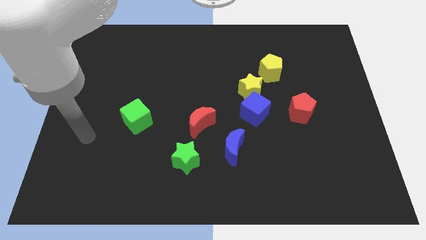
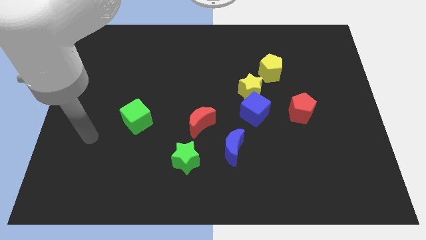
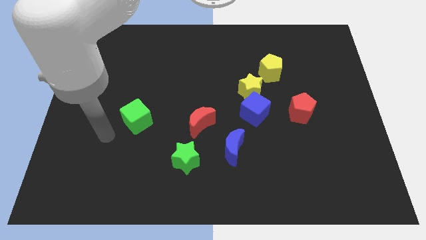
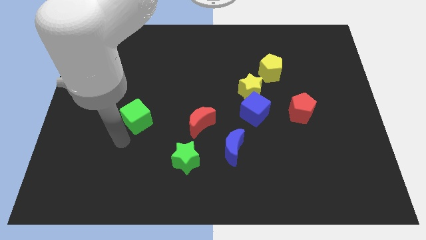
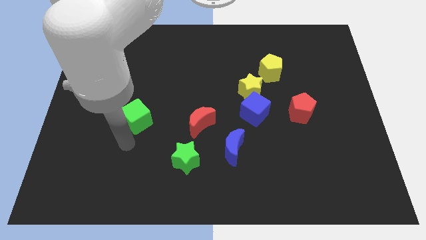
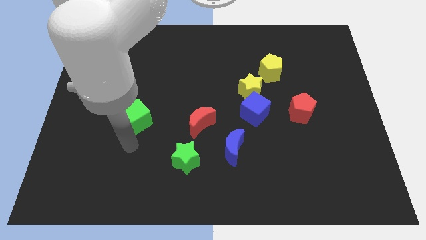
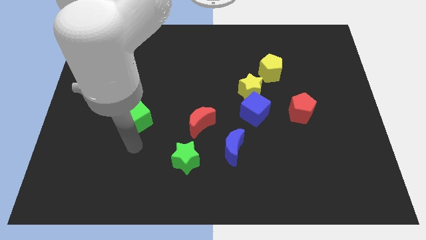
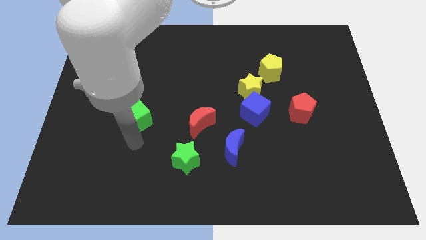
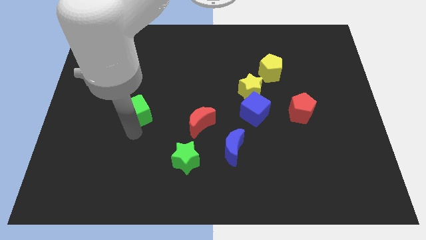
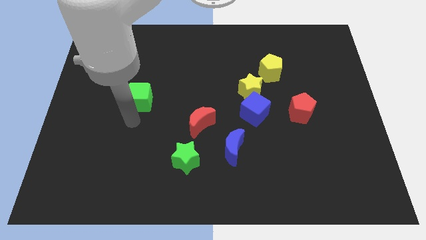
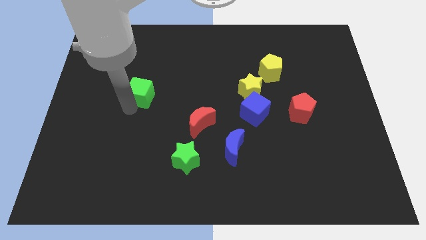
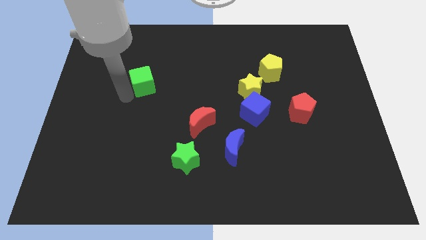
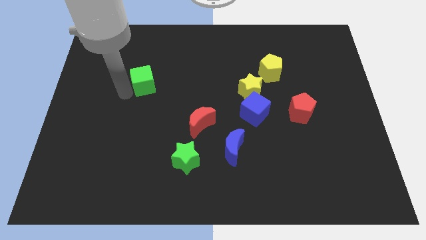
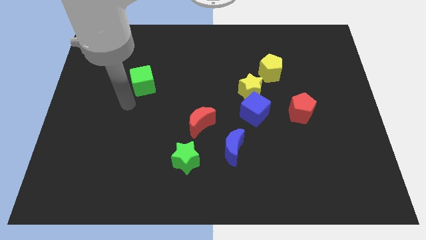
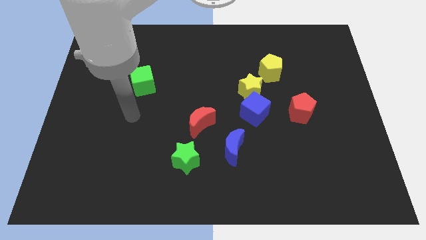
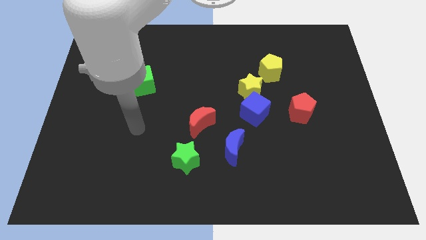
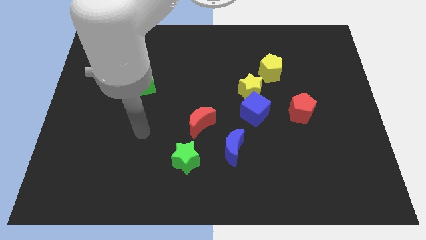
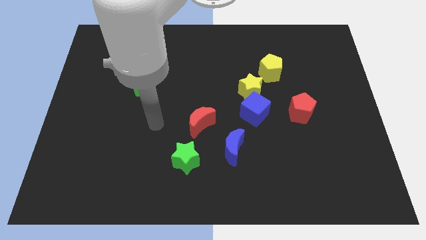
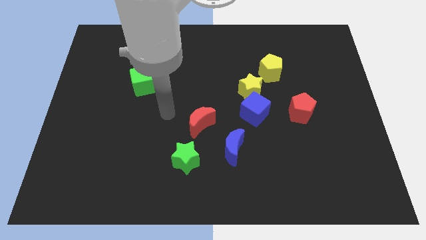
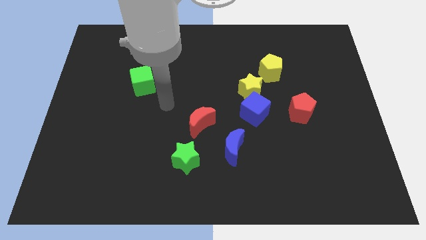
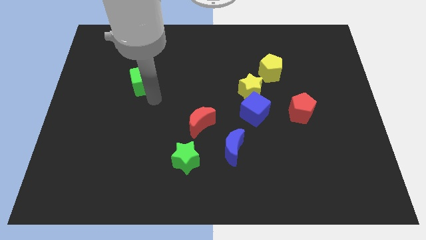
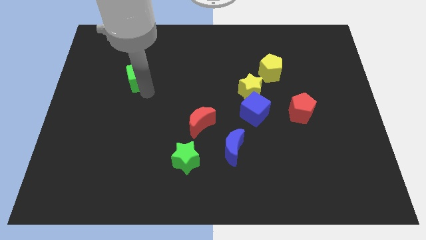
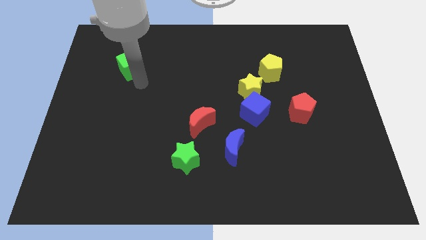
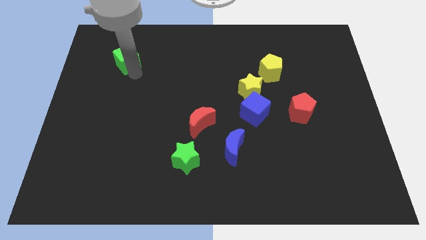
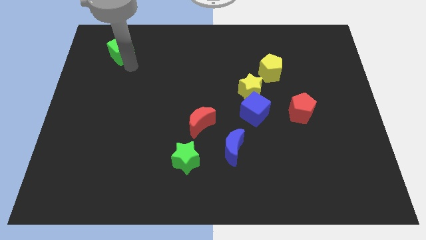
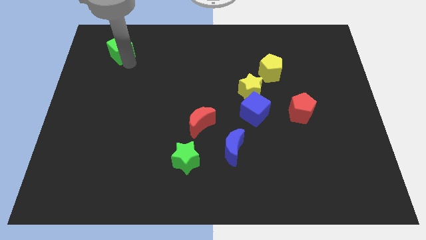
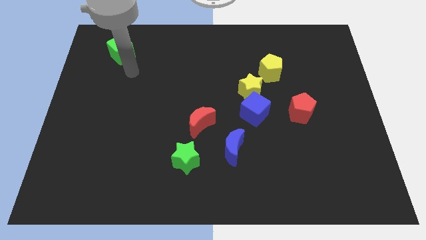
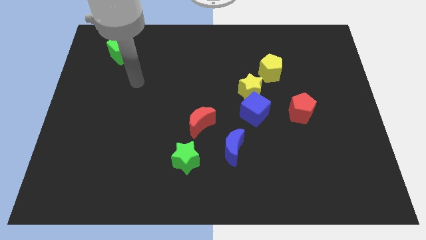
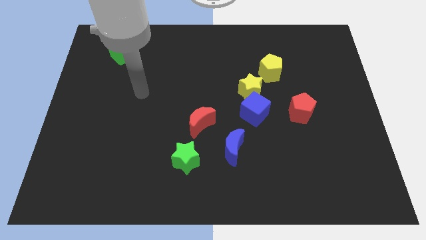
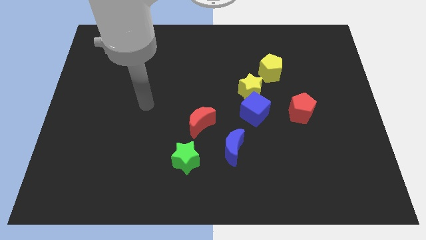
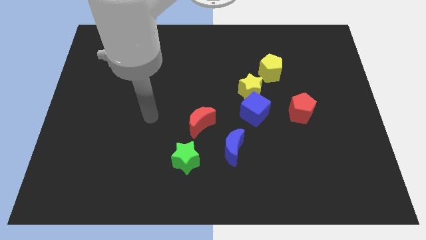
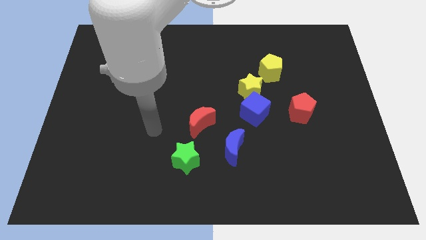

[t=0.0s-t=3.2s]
push the green cube upward

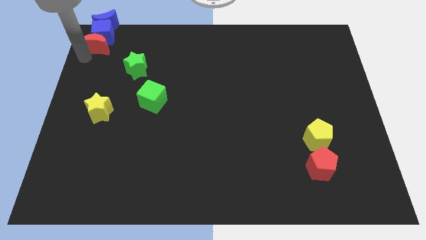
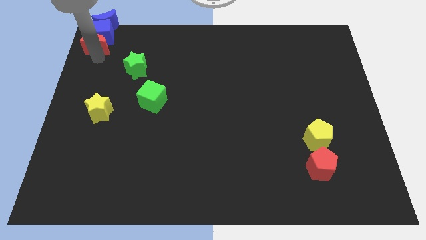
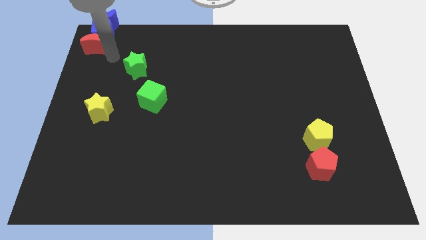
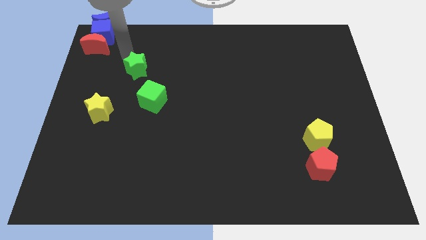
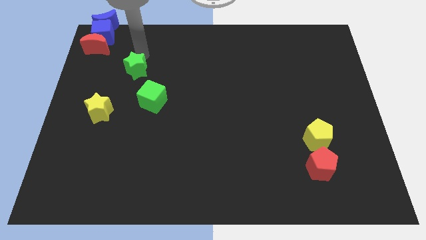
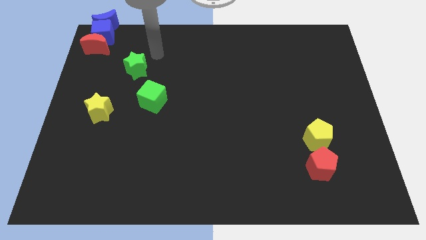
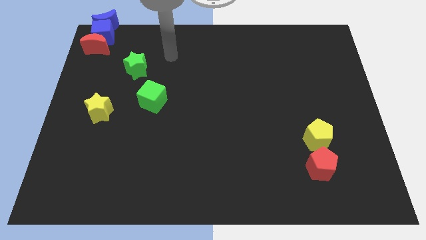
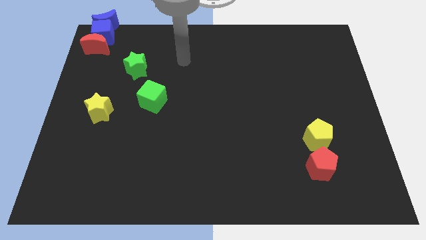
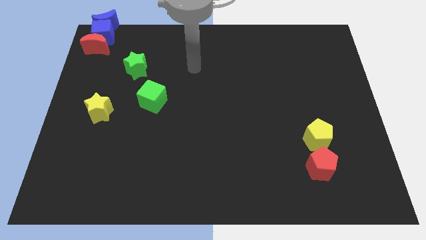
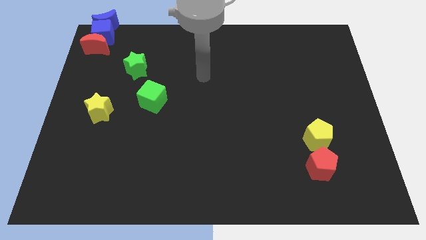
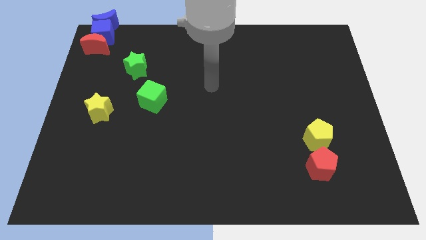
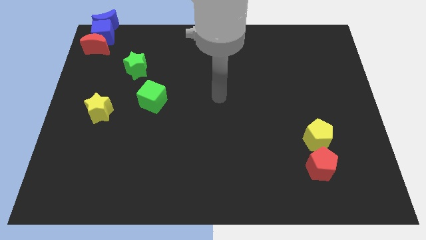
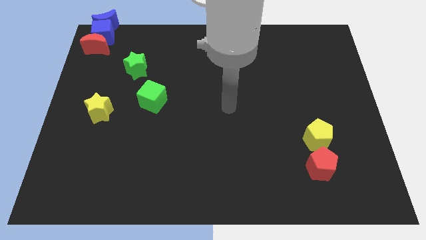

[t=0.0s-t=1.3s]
point your arm at the center of the board

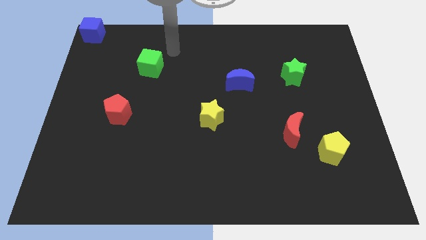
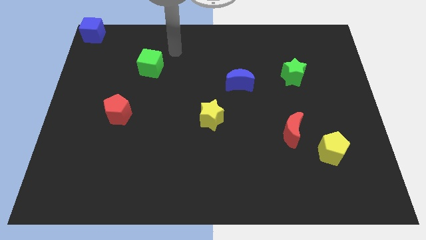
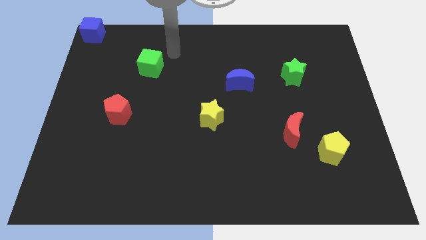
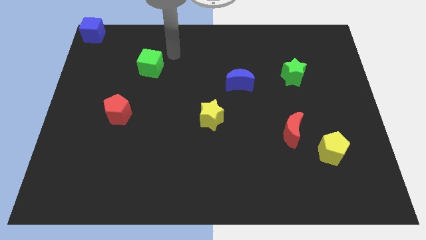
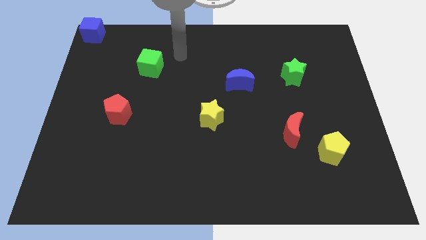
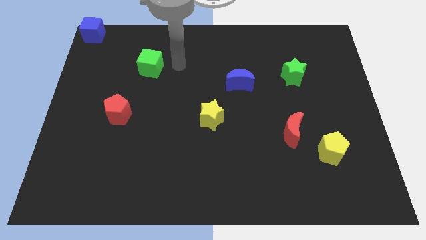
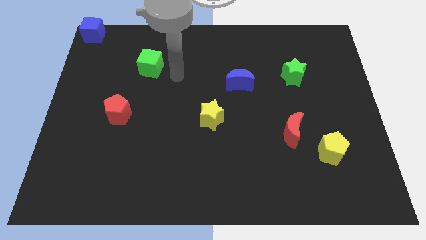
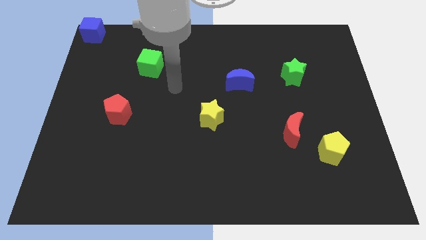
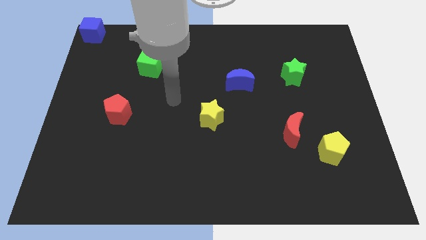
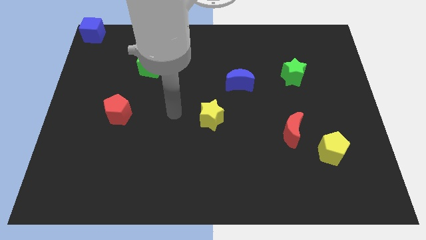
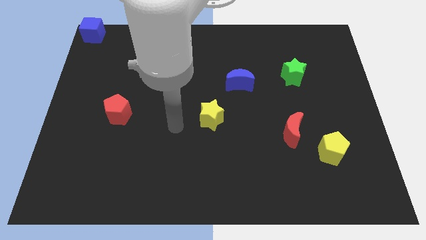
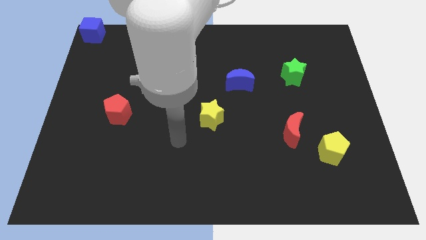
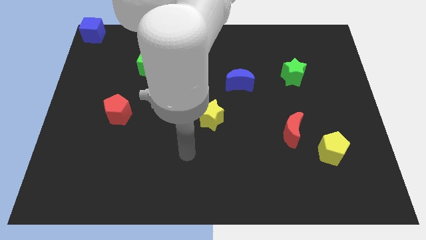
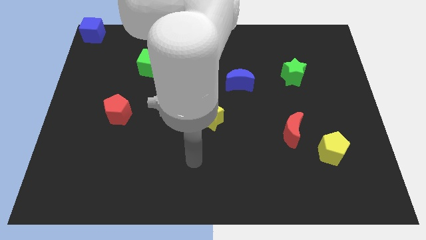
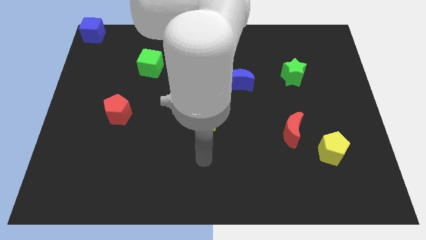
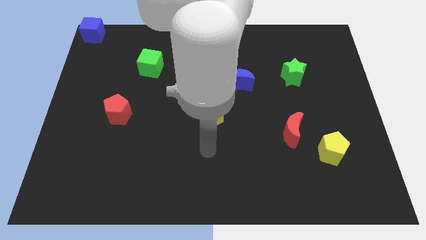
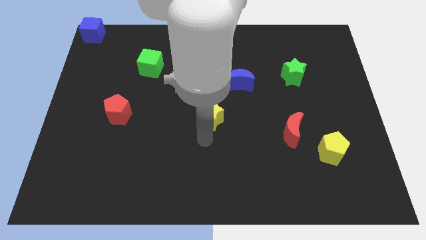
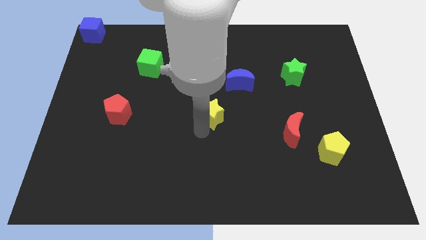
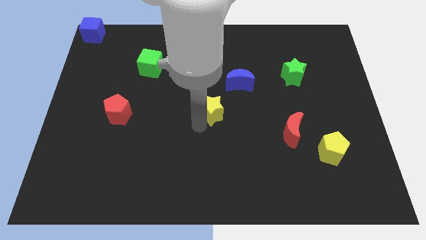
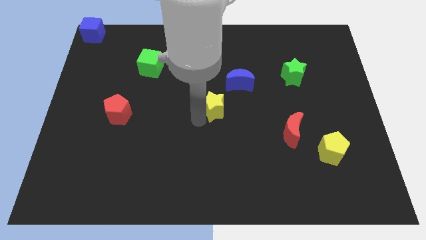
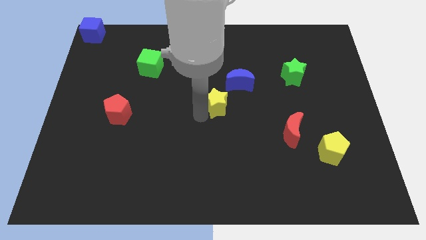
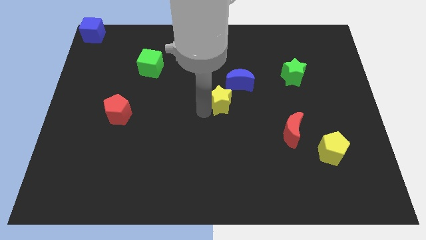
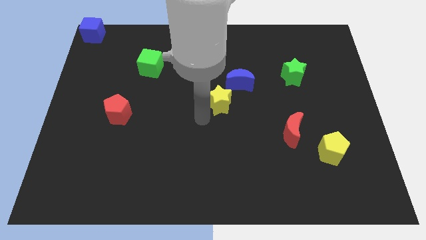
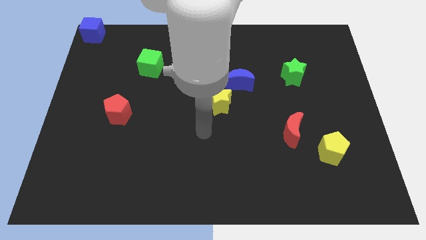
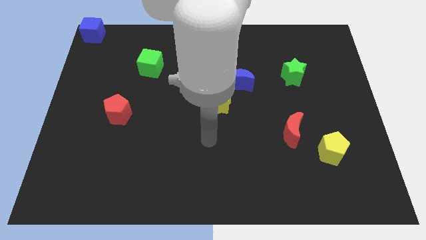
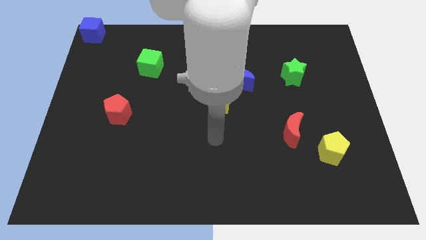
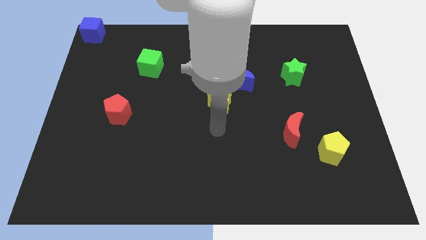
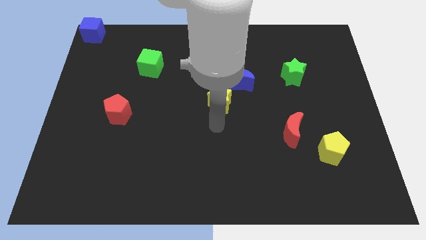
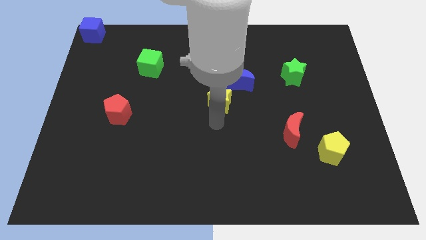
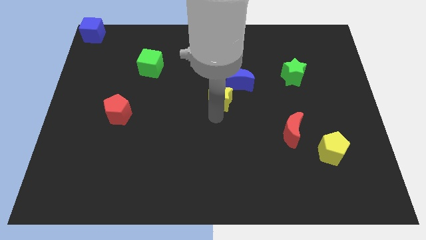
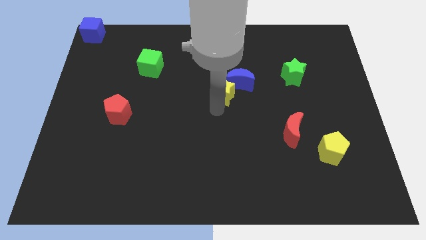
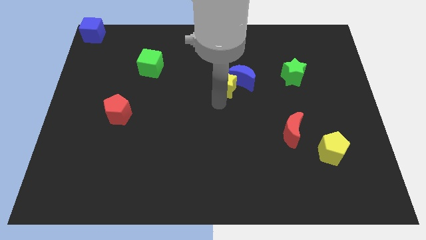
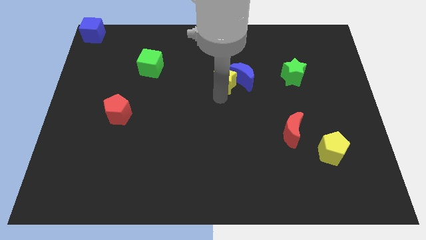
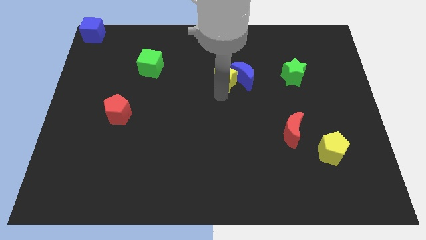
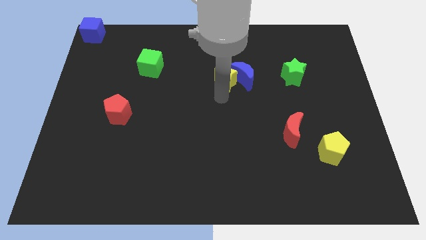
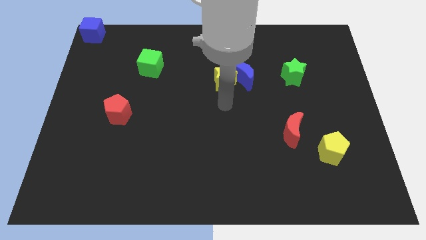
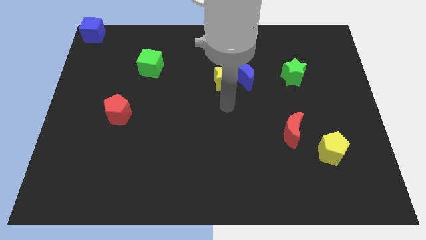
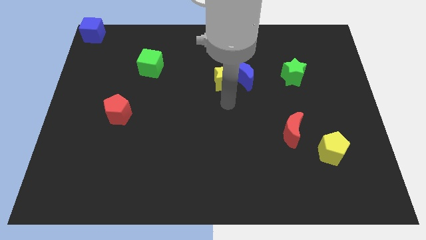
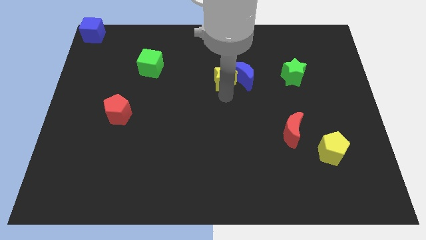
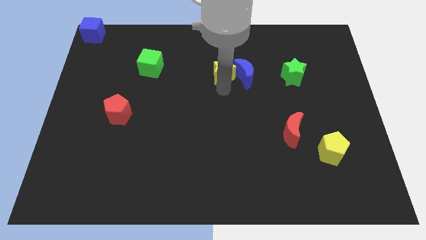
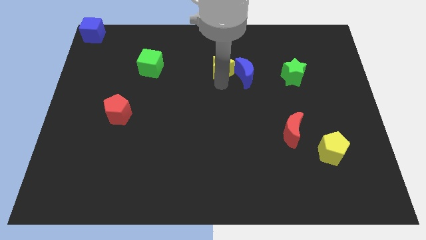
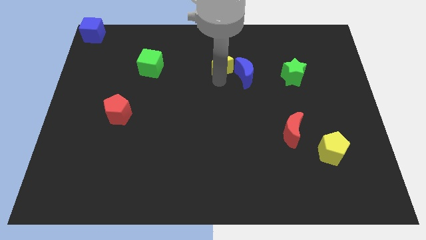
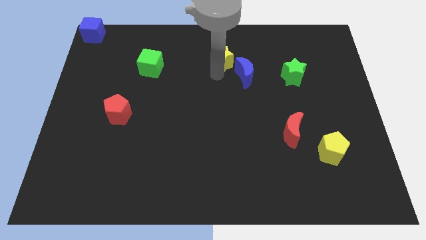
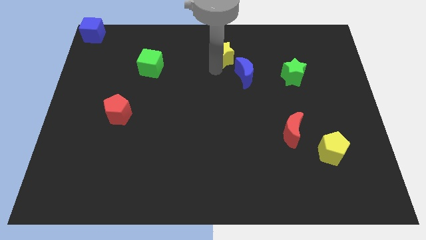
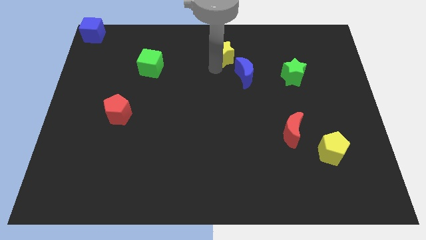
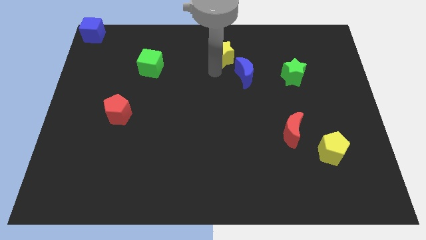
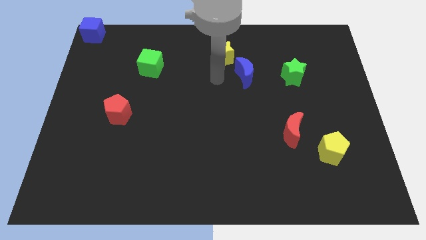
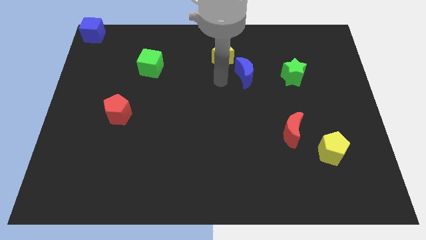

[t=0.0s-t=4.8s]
push the yellow star into the blue moon
